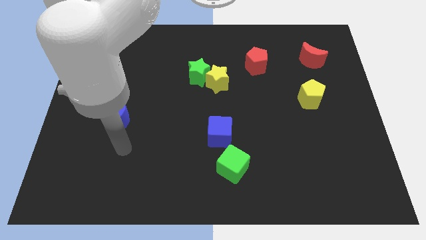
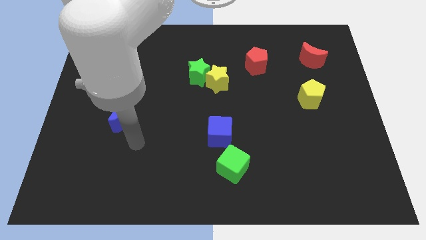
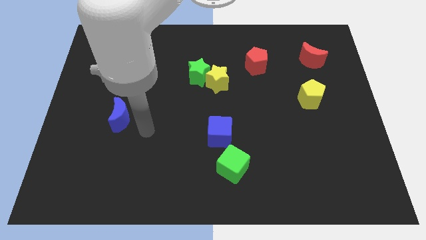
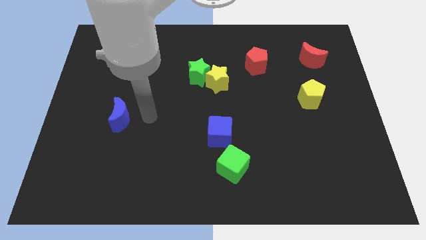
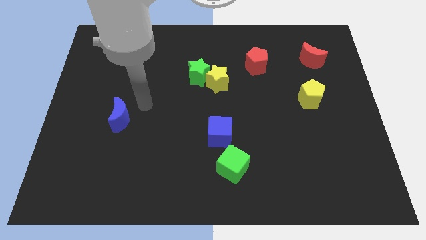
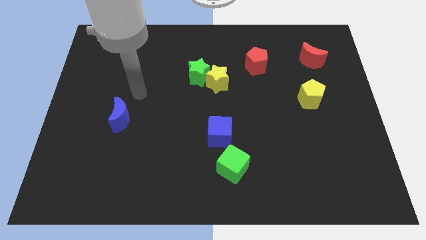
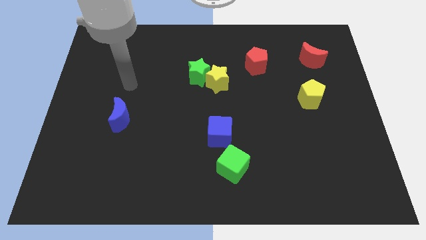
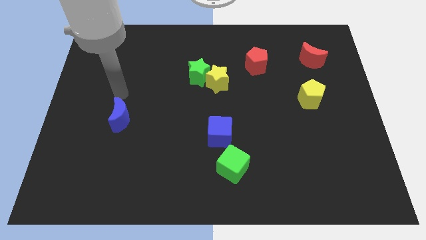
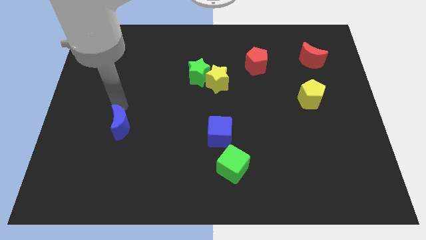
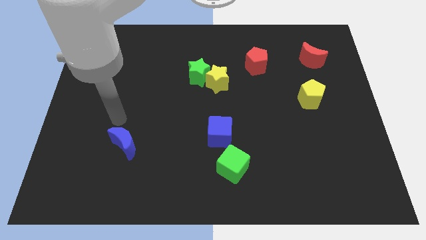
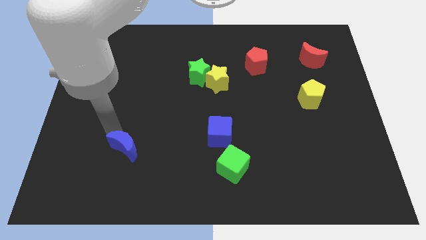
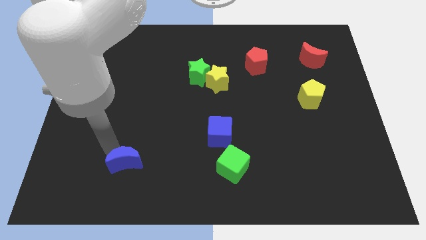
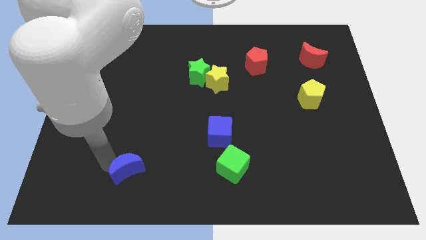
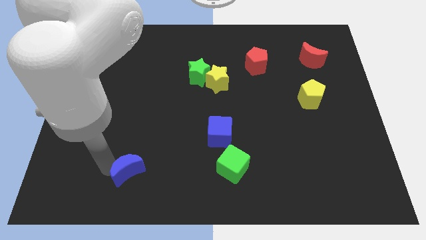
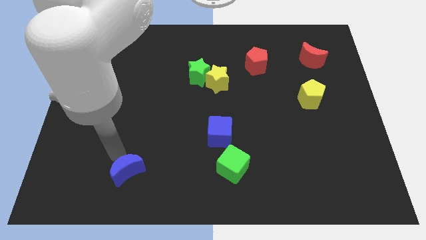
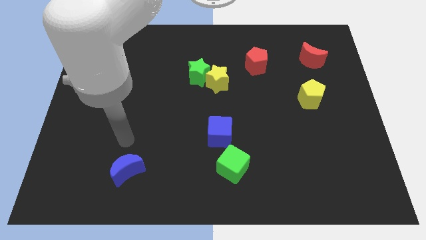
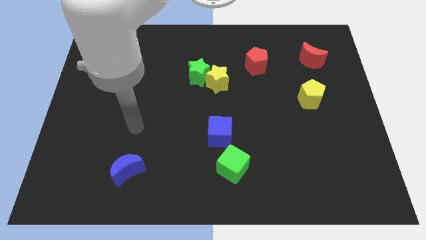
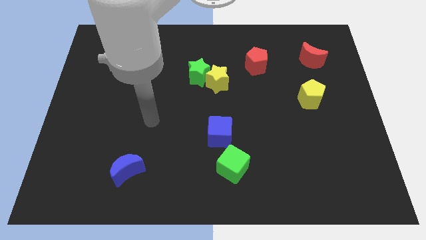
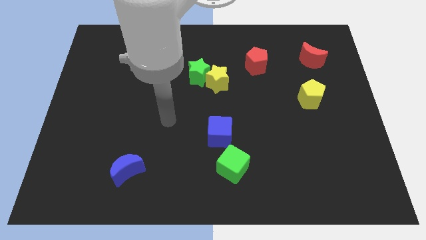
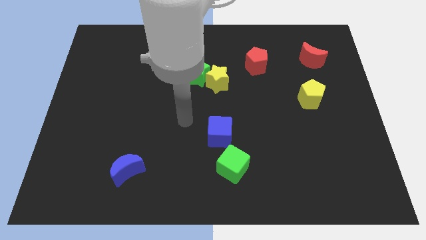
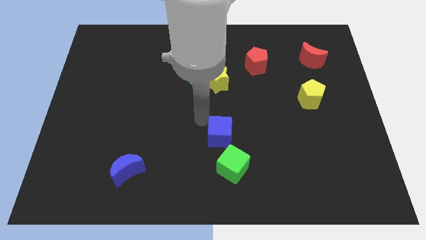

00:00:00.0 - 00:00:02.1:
push the blue crescent slightly to the bottom

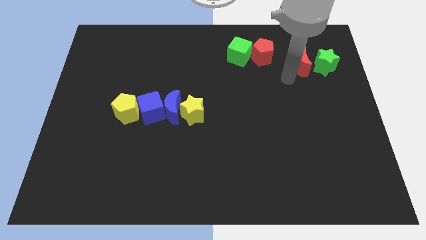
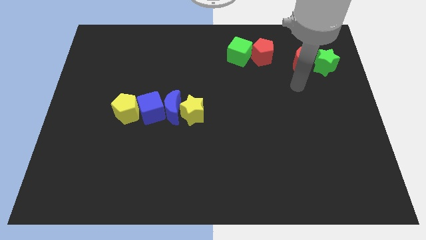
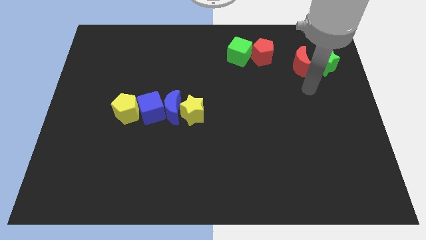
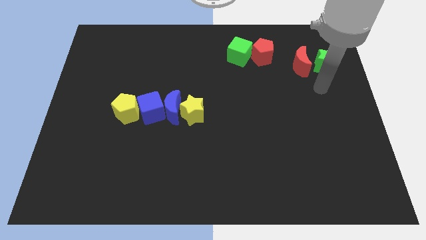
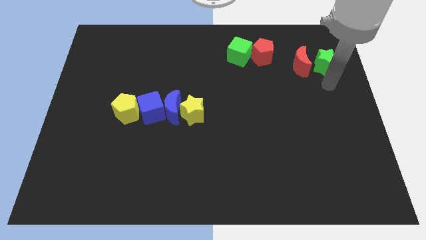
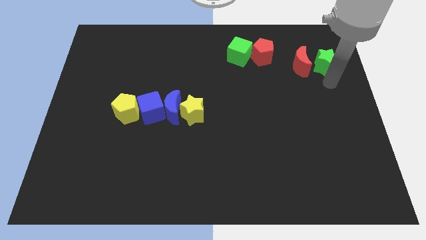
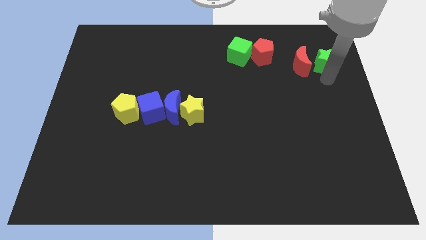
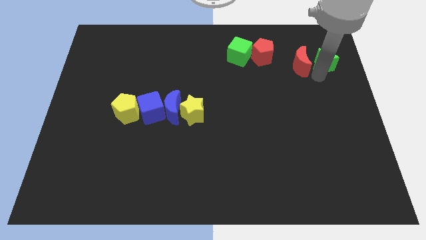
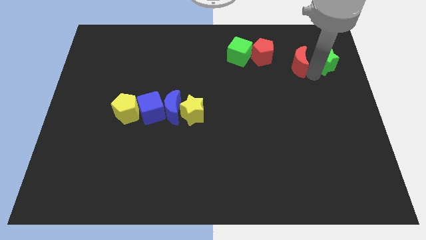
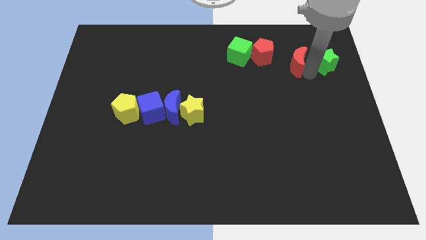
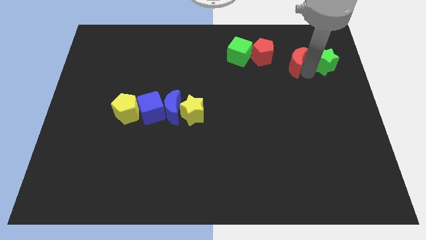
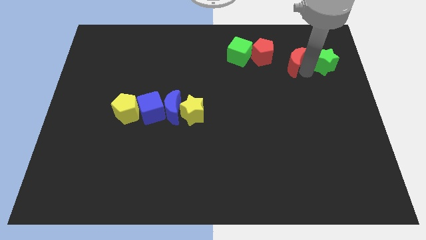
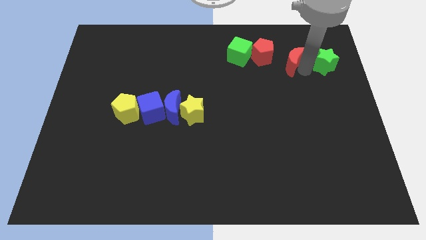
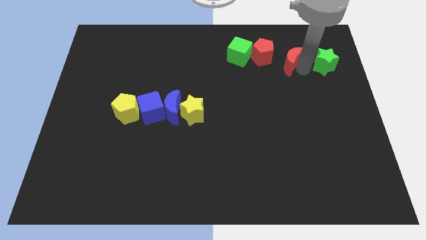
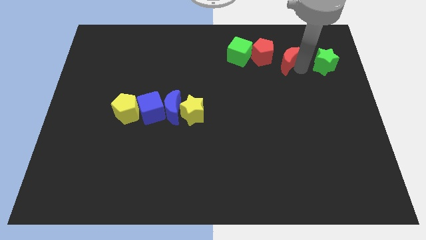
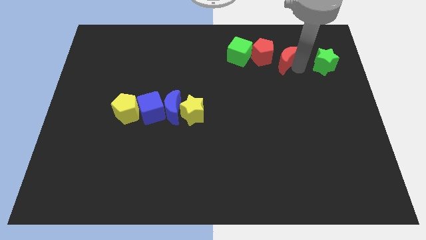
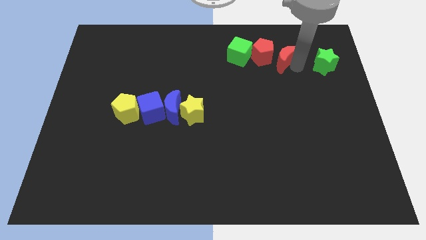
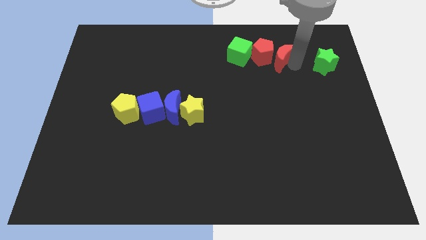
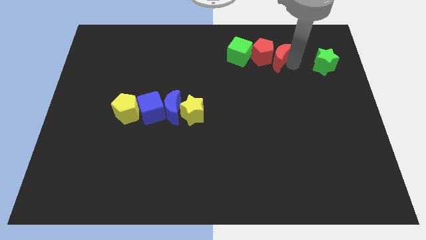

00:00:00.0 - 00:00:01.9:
push the red crescent close to the red pentagon

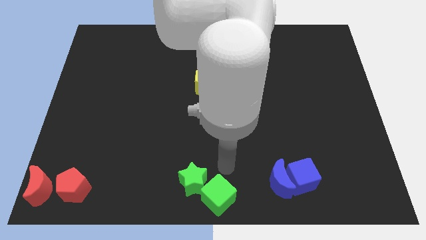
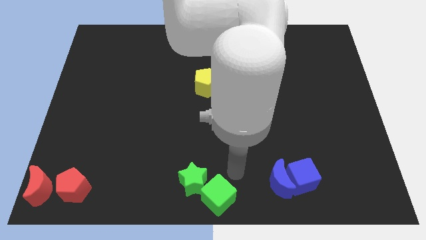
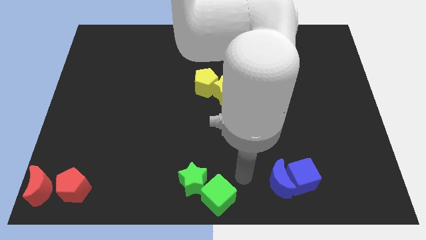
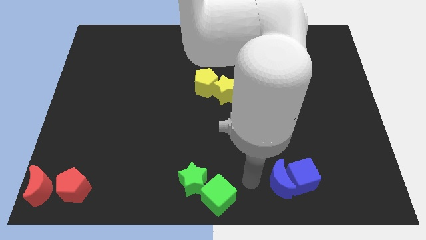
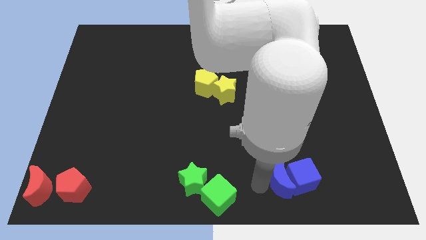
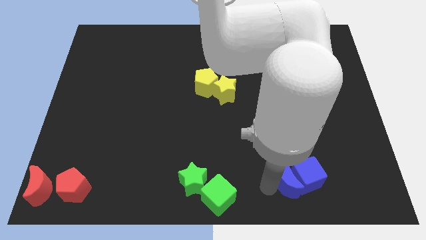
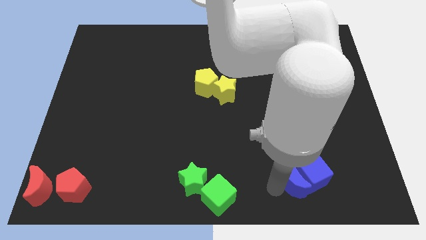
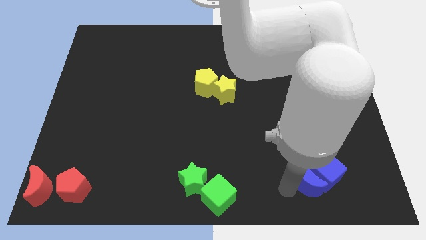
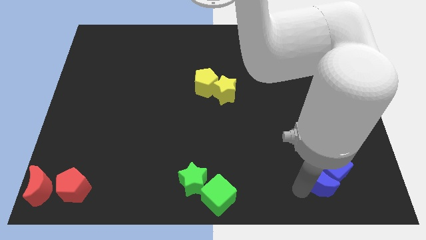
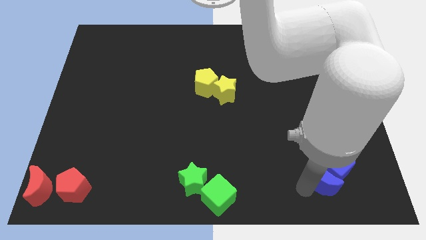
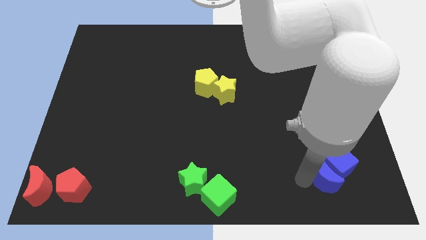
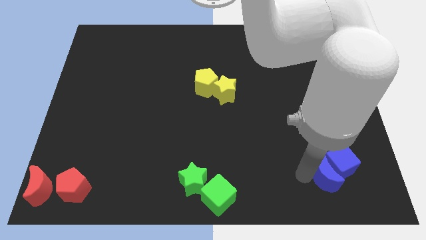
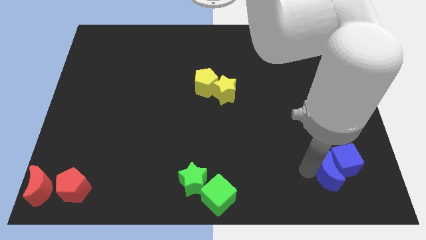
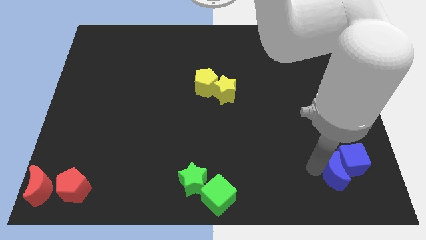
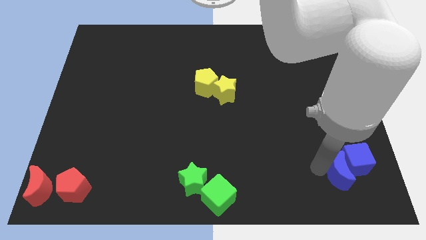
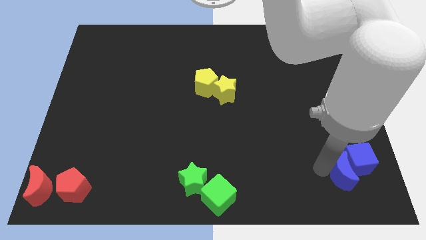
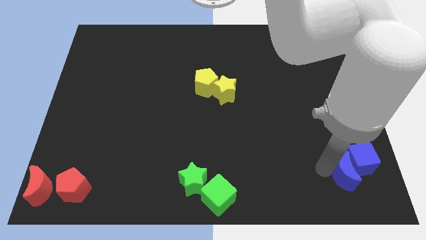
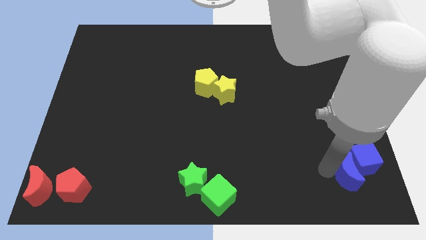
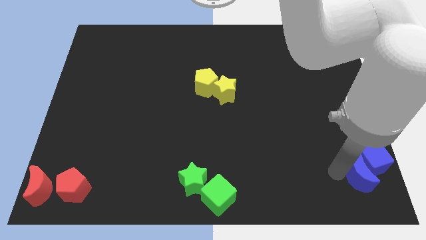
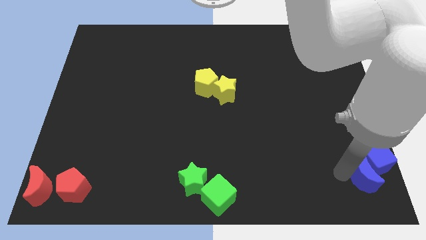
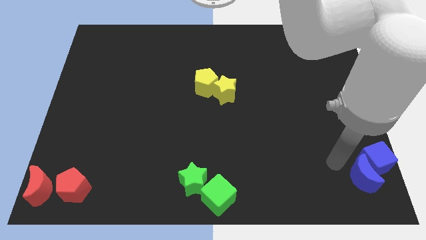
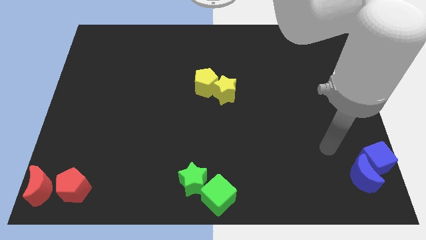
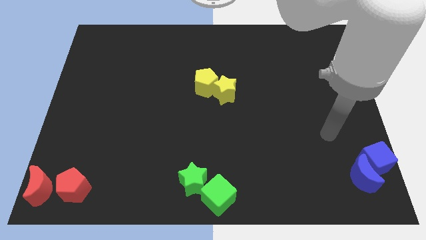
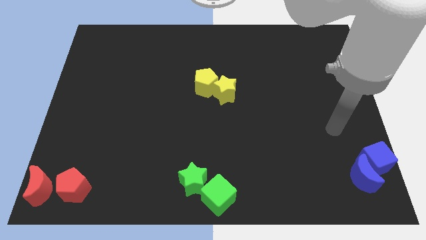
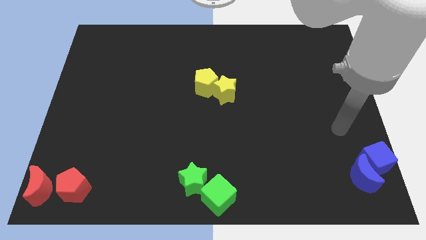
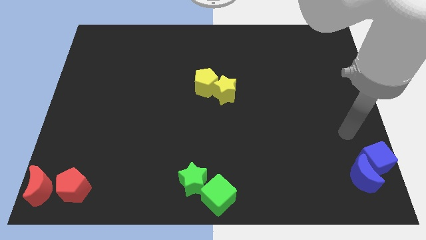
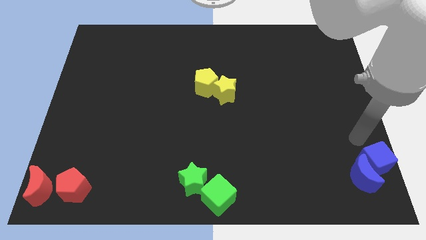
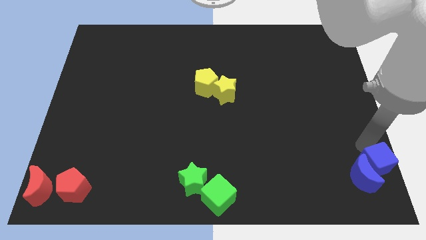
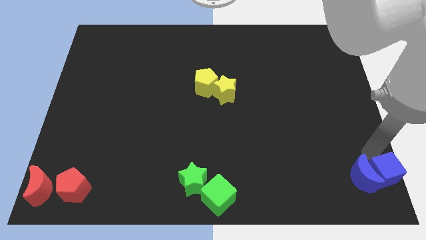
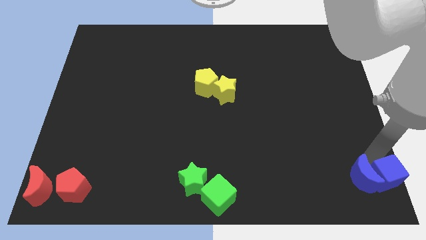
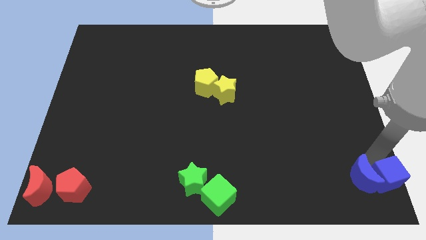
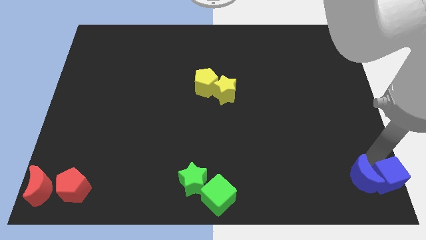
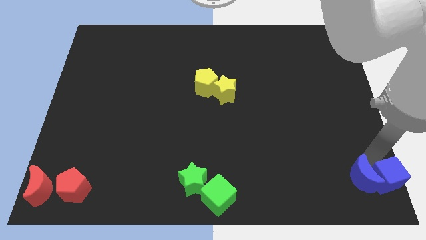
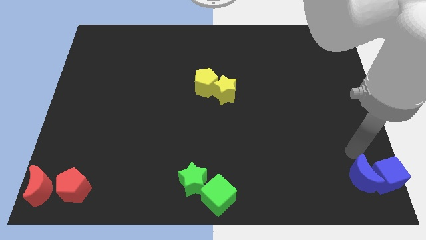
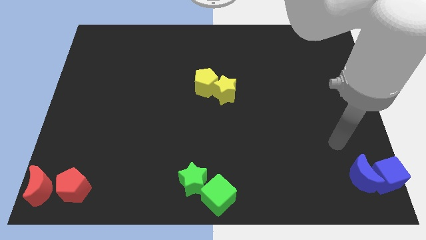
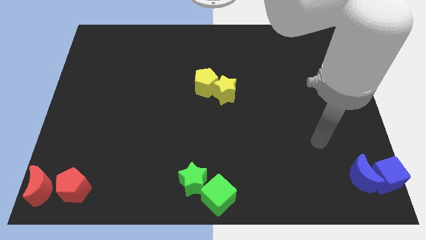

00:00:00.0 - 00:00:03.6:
move the blue cube towards the bottom right corner with the blue moon

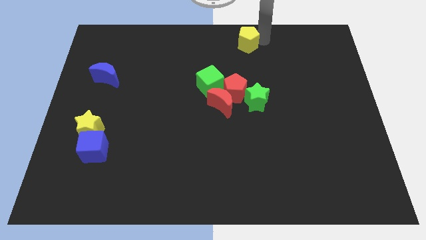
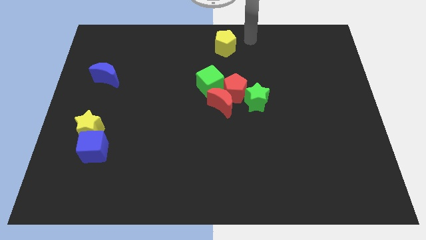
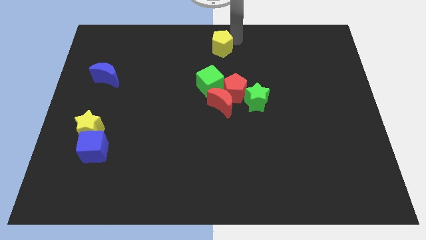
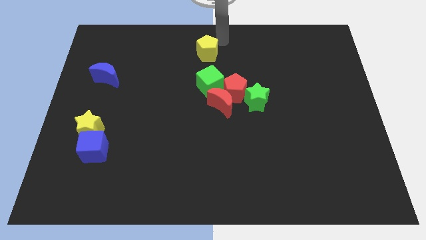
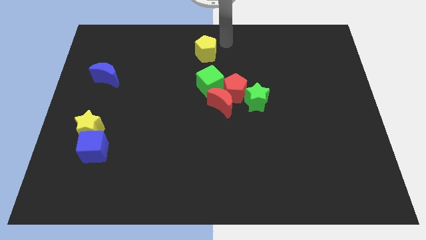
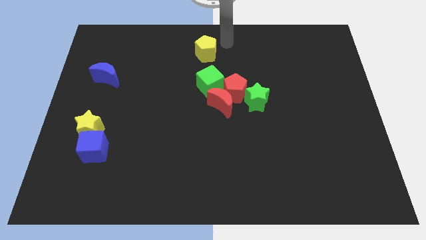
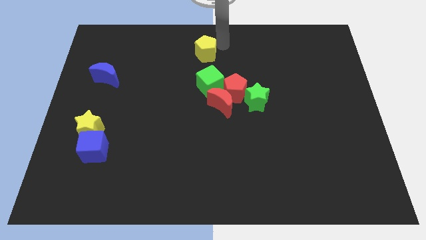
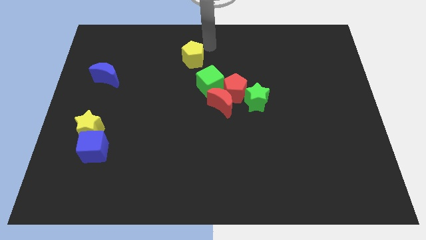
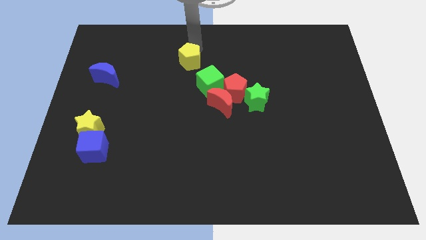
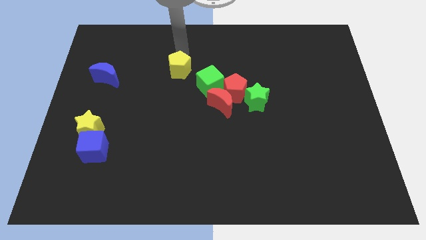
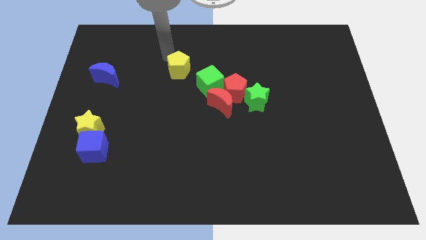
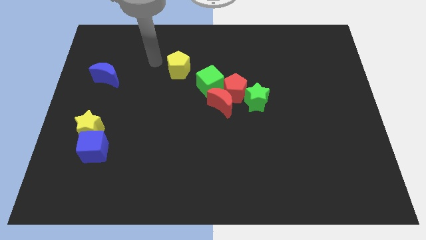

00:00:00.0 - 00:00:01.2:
move the yellow pentagon closer to the green cube
